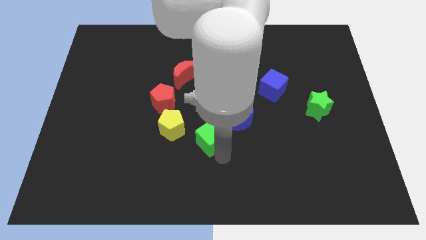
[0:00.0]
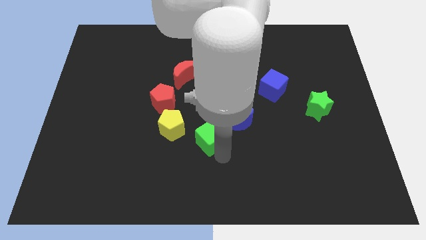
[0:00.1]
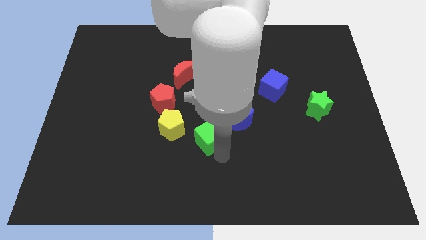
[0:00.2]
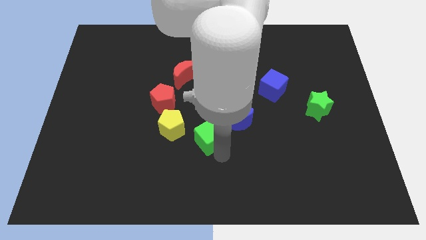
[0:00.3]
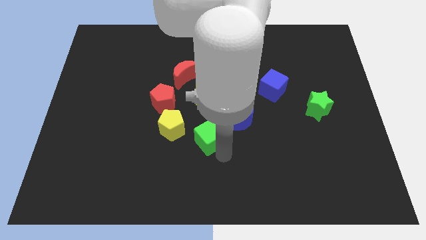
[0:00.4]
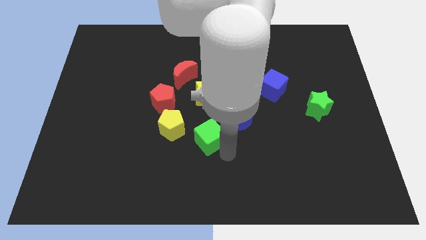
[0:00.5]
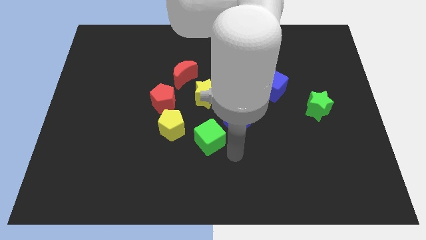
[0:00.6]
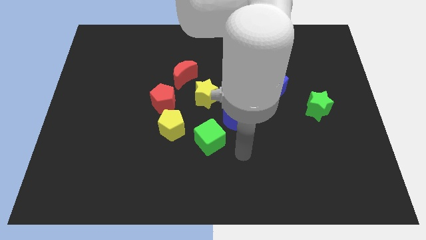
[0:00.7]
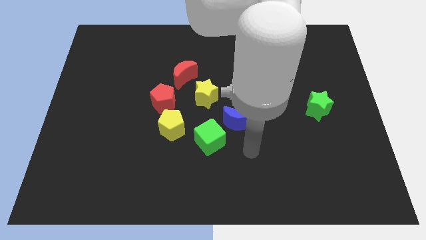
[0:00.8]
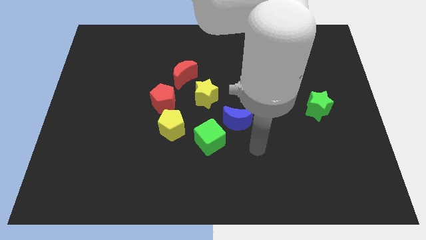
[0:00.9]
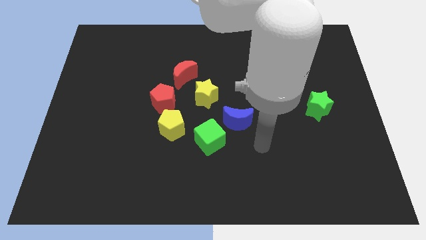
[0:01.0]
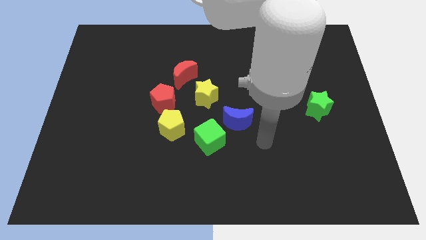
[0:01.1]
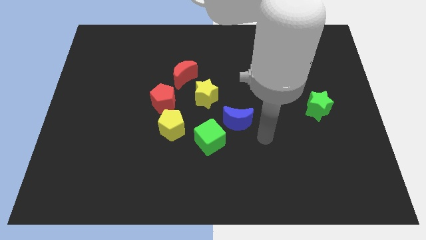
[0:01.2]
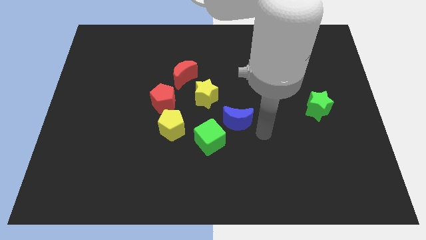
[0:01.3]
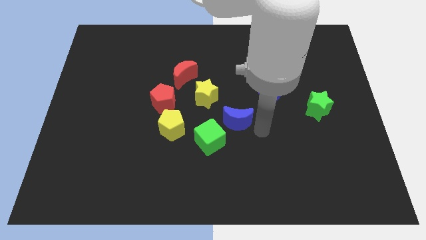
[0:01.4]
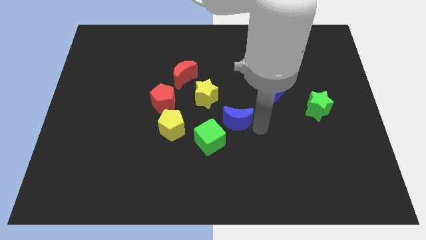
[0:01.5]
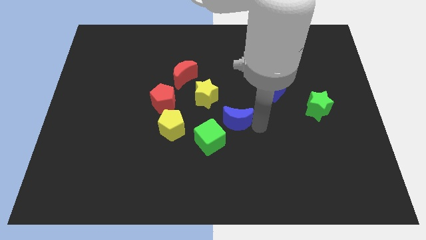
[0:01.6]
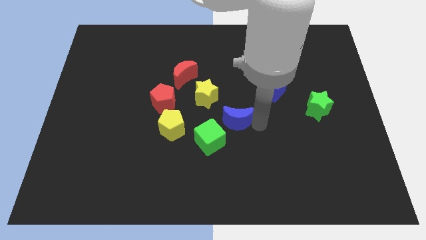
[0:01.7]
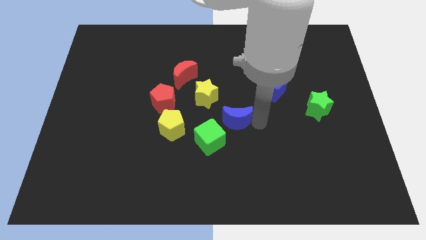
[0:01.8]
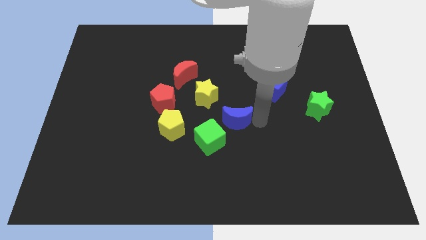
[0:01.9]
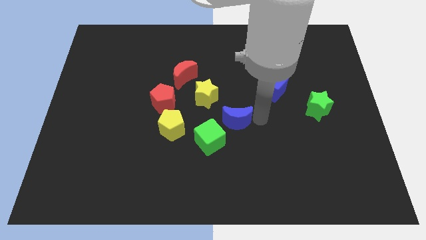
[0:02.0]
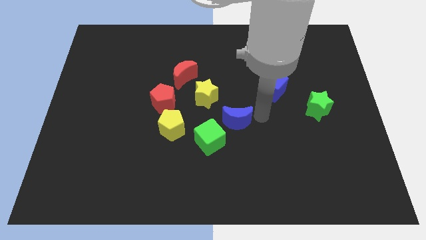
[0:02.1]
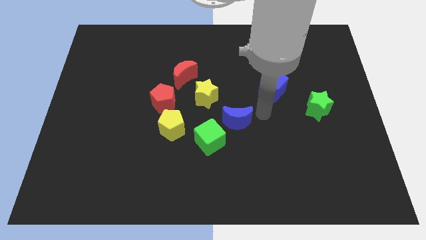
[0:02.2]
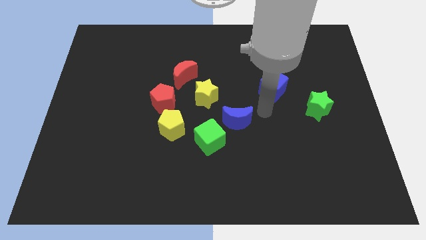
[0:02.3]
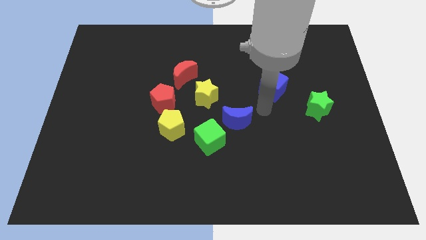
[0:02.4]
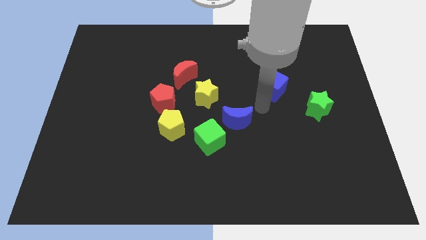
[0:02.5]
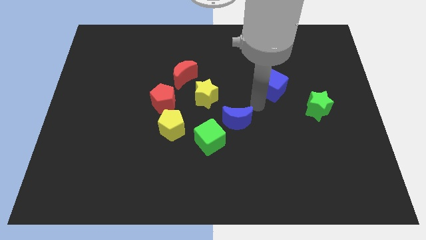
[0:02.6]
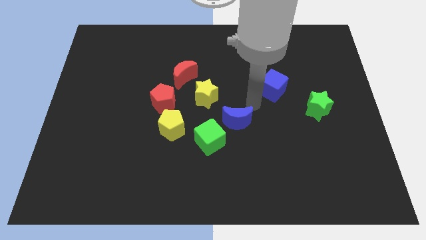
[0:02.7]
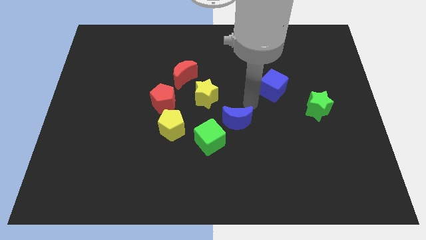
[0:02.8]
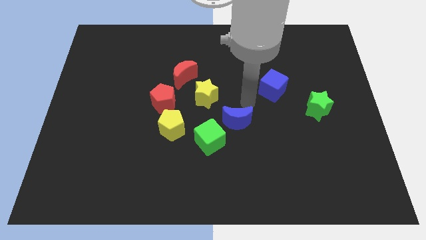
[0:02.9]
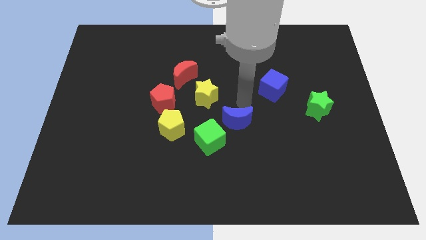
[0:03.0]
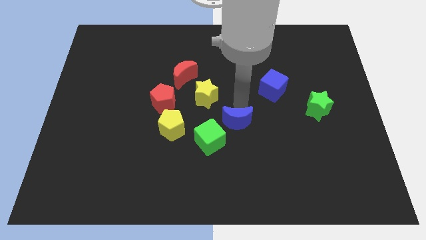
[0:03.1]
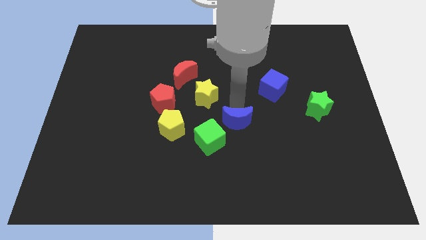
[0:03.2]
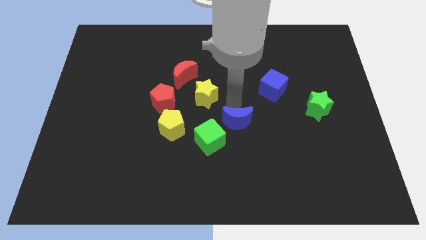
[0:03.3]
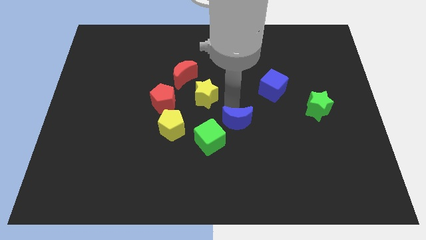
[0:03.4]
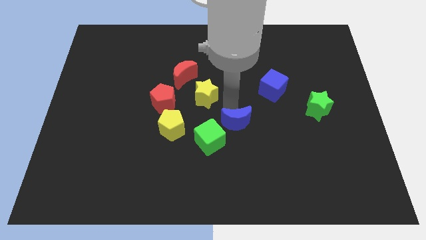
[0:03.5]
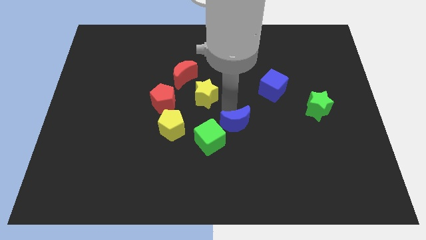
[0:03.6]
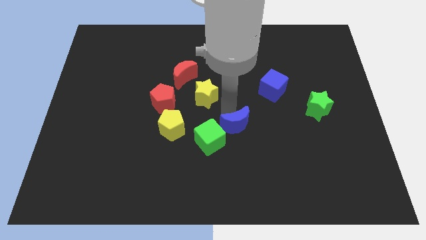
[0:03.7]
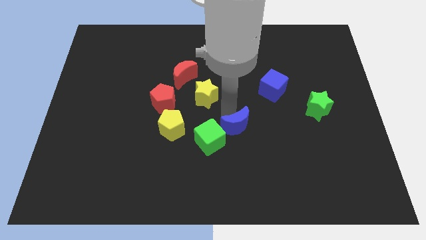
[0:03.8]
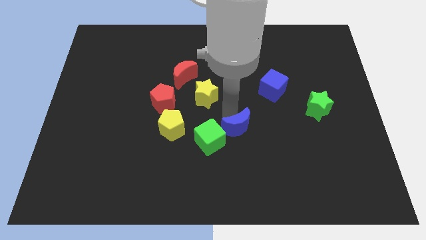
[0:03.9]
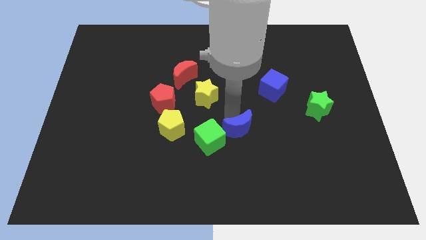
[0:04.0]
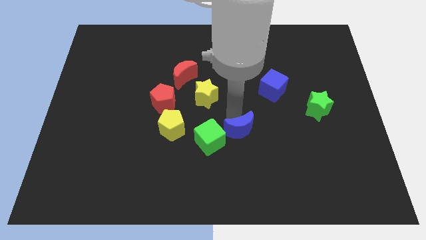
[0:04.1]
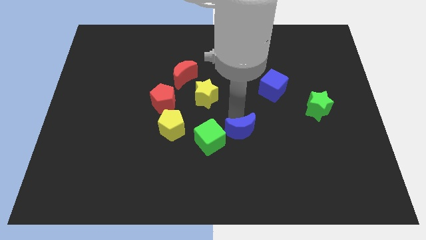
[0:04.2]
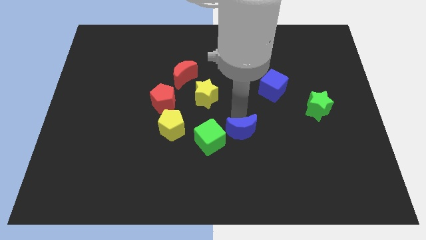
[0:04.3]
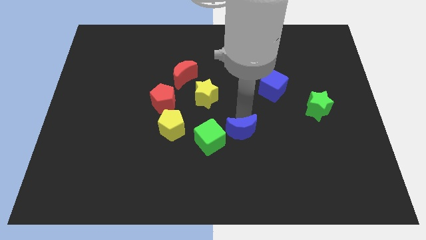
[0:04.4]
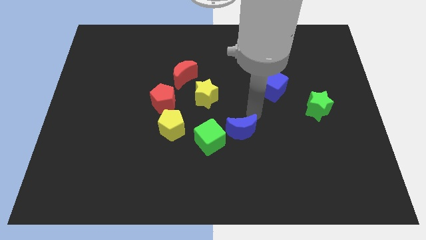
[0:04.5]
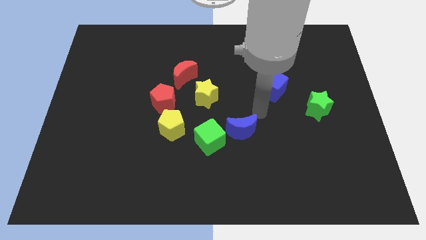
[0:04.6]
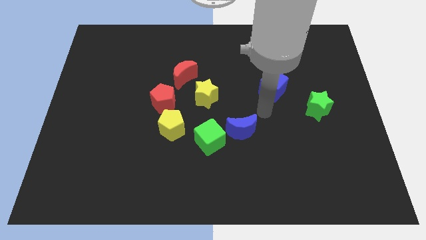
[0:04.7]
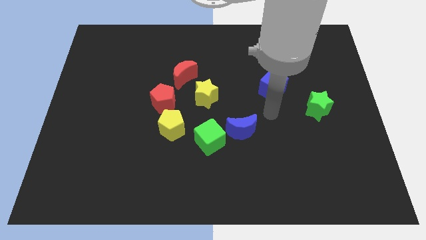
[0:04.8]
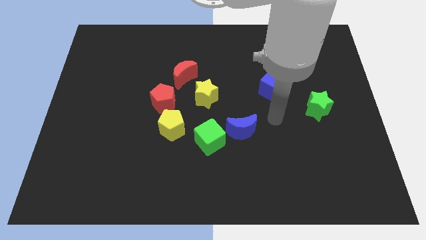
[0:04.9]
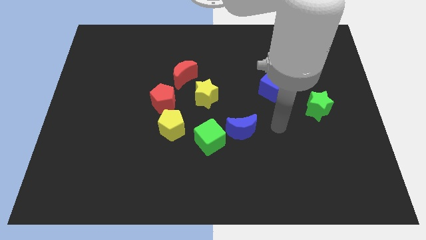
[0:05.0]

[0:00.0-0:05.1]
move blue moon slightly down

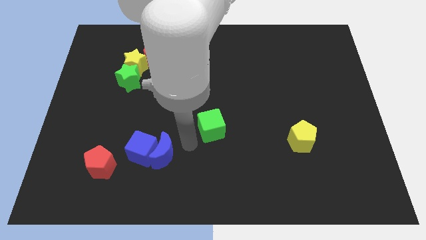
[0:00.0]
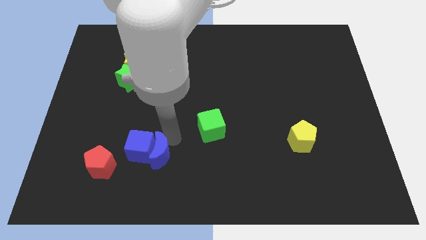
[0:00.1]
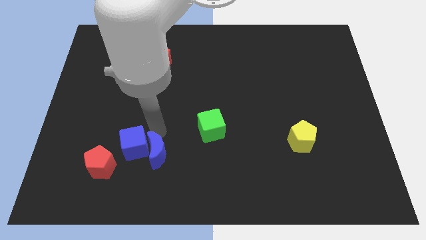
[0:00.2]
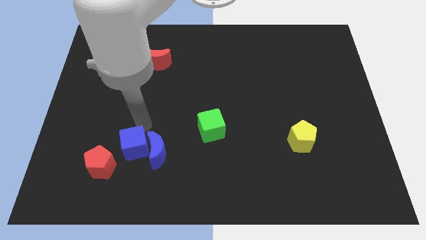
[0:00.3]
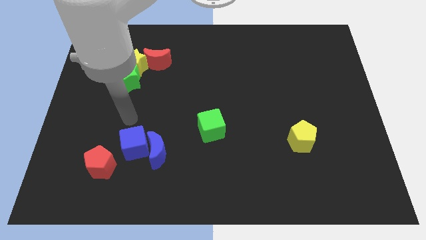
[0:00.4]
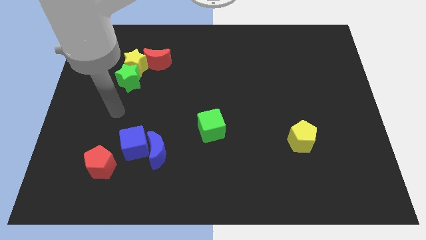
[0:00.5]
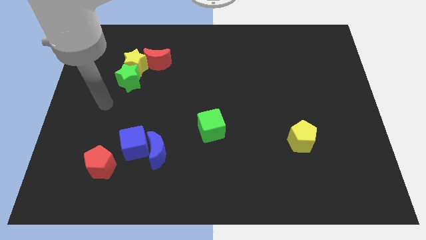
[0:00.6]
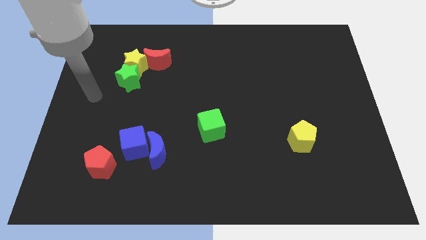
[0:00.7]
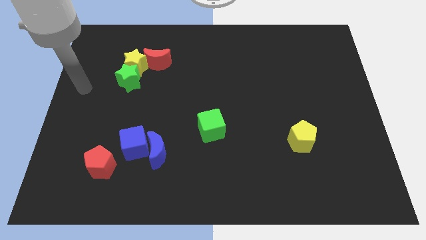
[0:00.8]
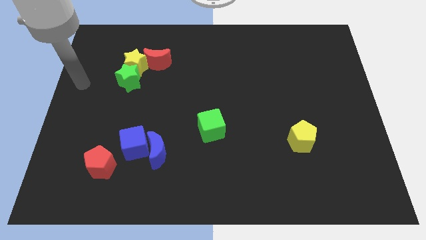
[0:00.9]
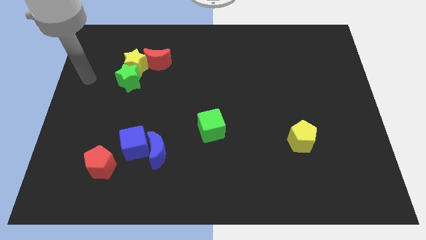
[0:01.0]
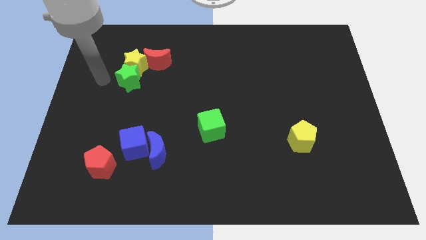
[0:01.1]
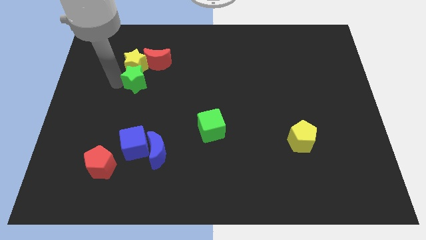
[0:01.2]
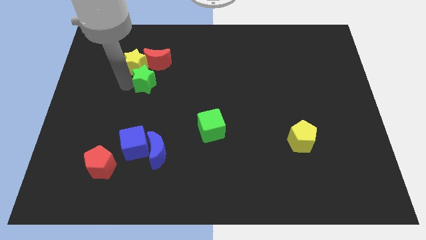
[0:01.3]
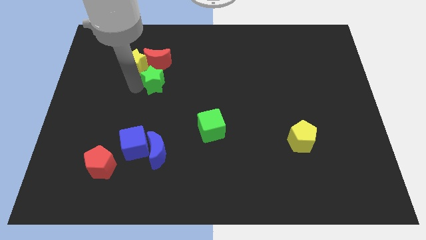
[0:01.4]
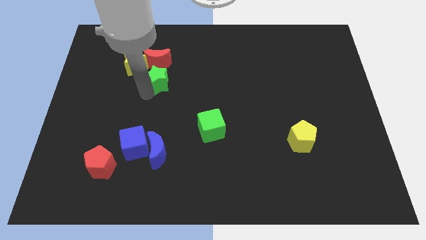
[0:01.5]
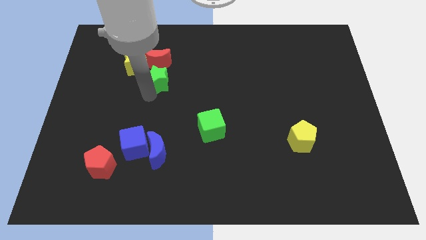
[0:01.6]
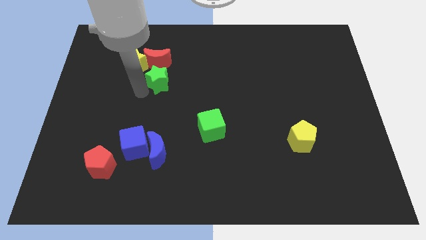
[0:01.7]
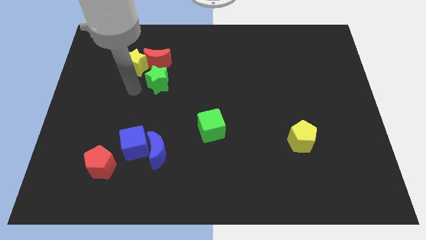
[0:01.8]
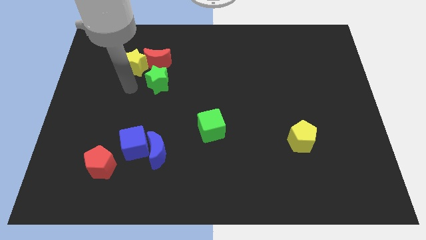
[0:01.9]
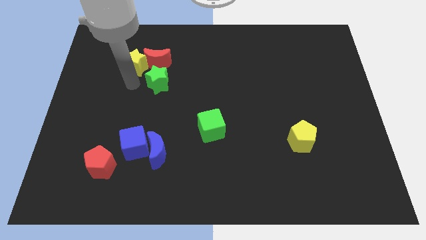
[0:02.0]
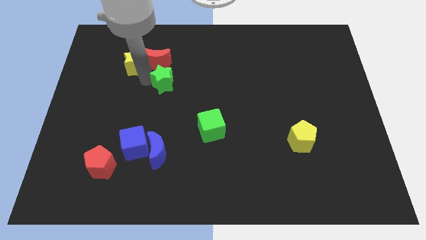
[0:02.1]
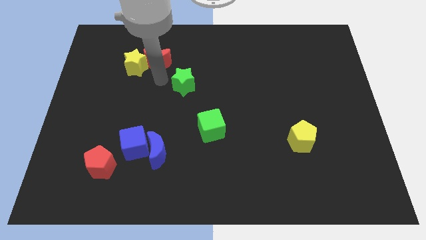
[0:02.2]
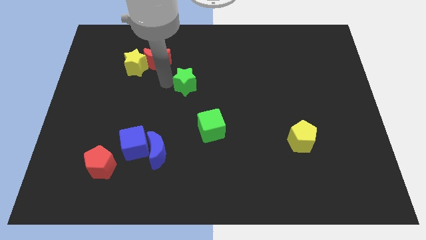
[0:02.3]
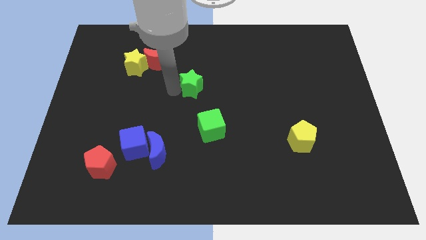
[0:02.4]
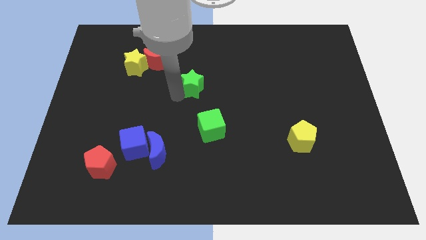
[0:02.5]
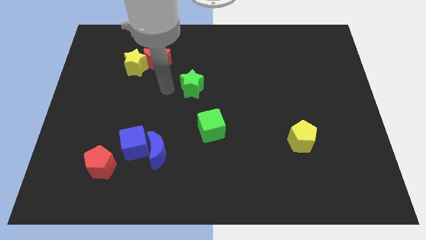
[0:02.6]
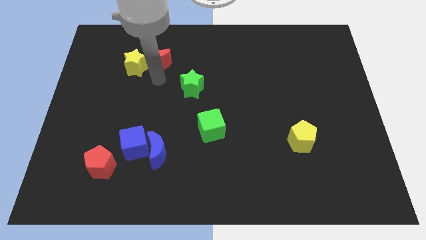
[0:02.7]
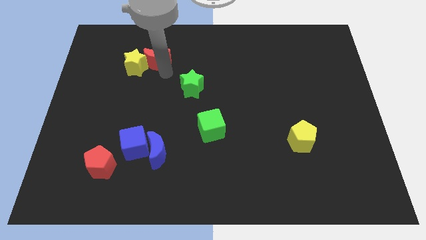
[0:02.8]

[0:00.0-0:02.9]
separate green star from yellow star

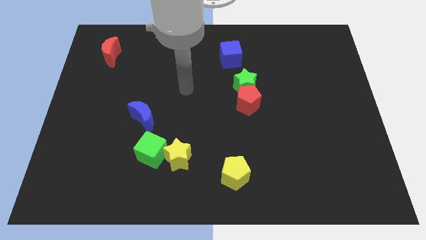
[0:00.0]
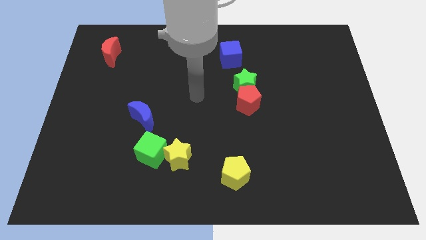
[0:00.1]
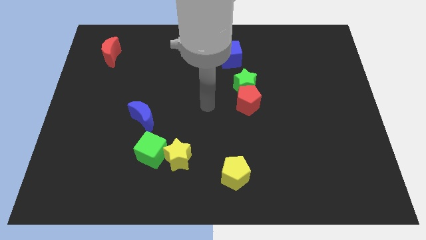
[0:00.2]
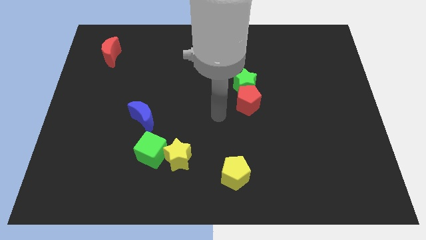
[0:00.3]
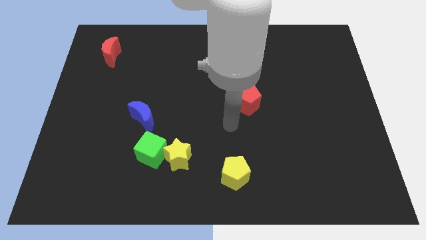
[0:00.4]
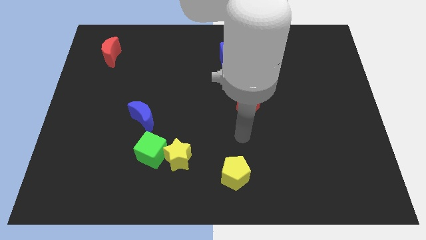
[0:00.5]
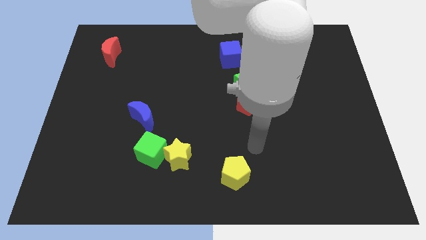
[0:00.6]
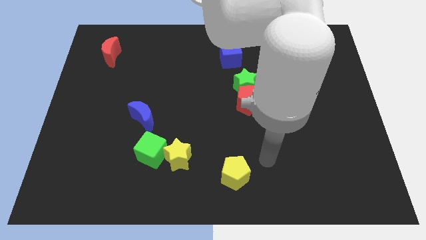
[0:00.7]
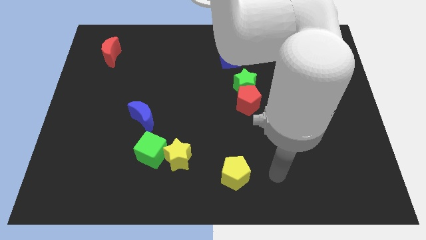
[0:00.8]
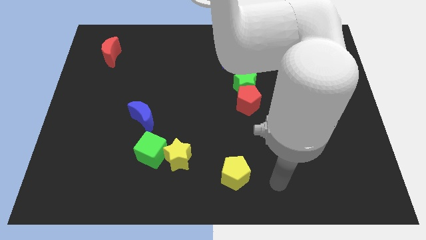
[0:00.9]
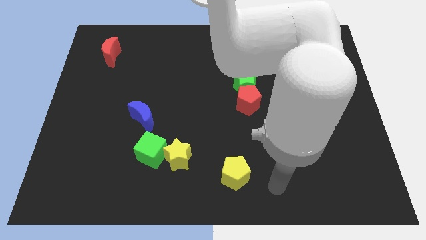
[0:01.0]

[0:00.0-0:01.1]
move your arm towards the yellow pentagon
